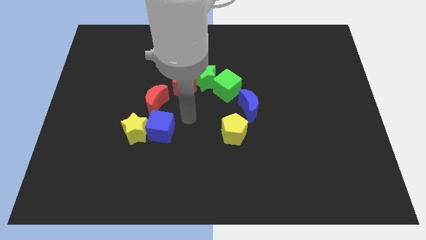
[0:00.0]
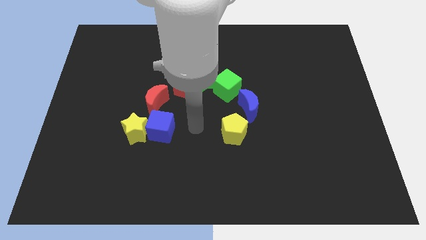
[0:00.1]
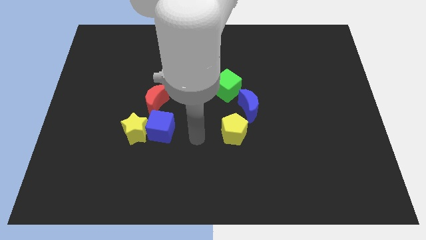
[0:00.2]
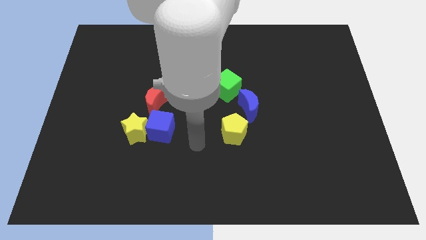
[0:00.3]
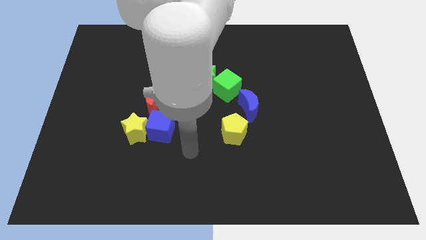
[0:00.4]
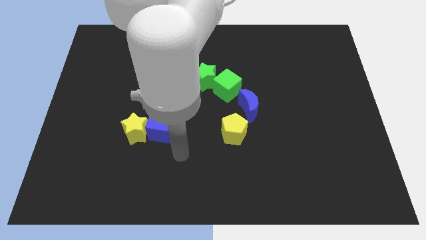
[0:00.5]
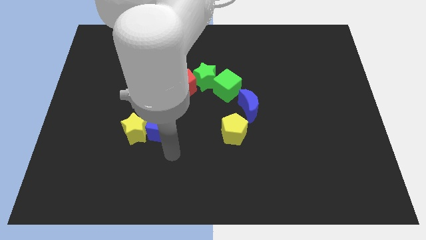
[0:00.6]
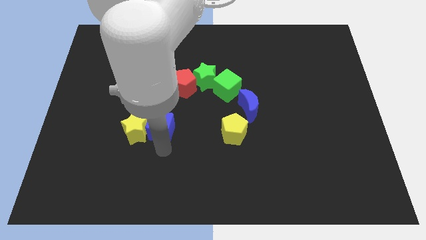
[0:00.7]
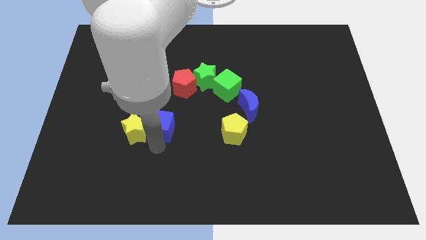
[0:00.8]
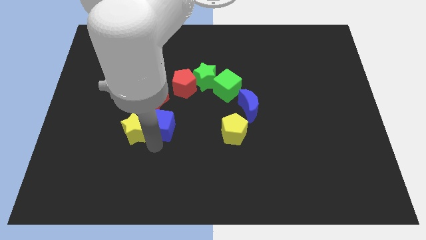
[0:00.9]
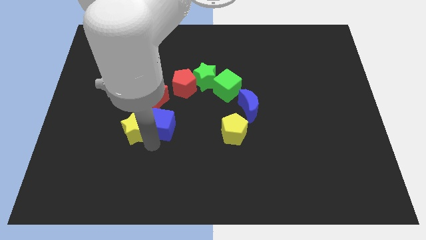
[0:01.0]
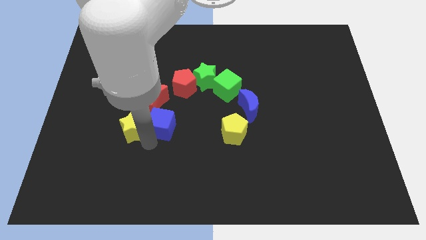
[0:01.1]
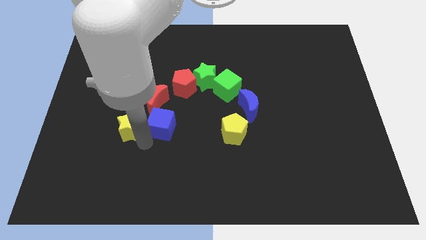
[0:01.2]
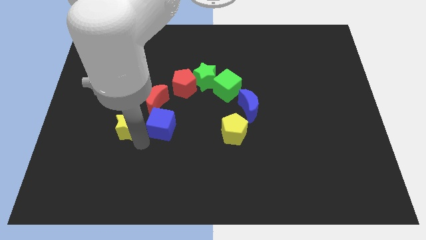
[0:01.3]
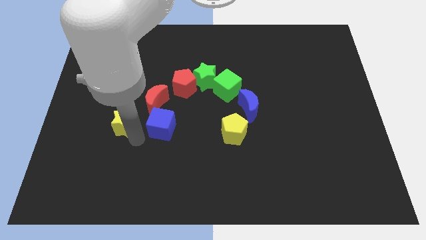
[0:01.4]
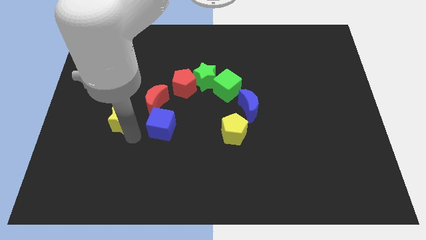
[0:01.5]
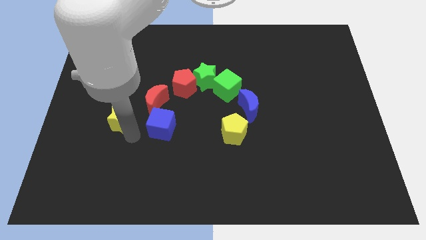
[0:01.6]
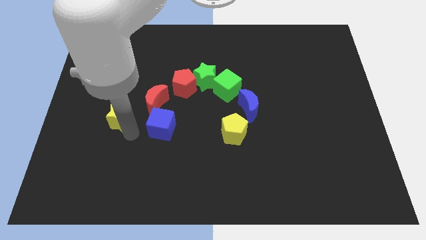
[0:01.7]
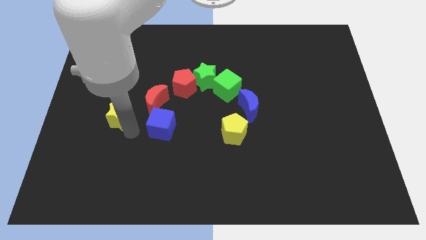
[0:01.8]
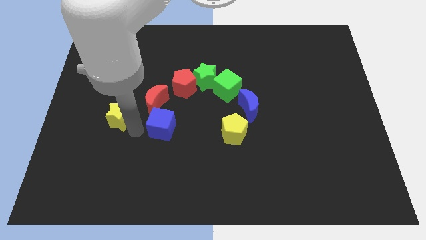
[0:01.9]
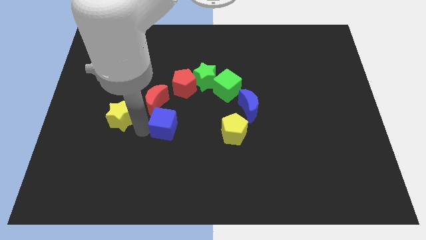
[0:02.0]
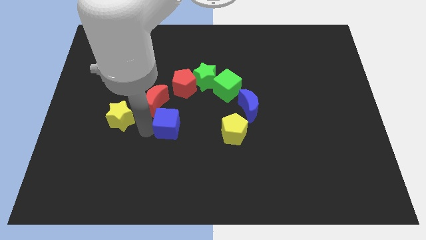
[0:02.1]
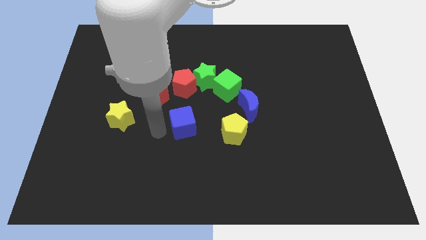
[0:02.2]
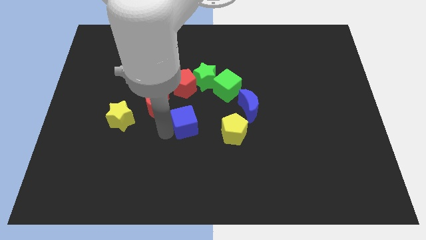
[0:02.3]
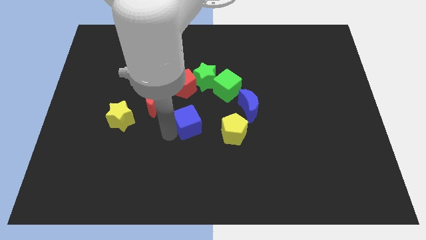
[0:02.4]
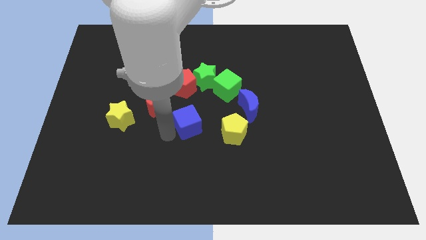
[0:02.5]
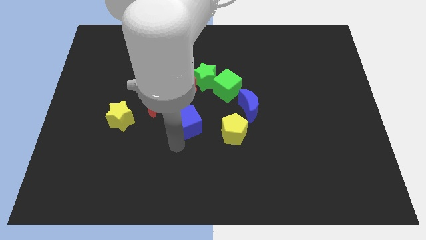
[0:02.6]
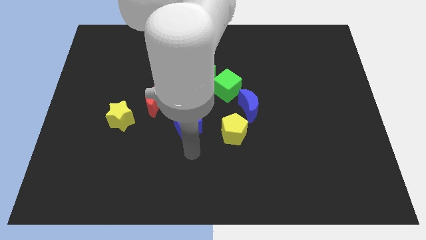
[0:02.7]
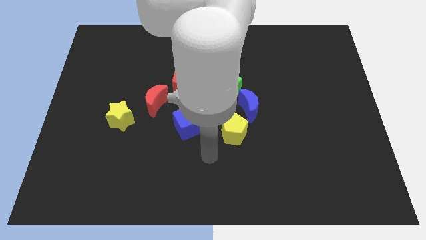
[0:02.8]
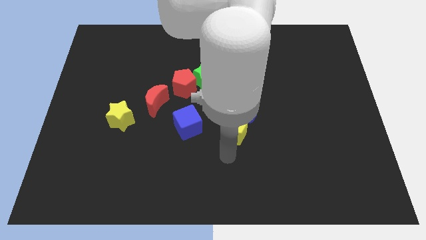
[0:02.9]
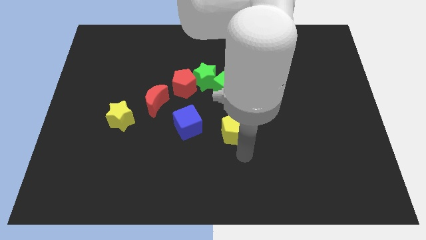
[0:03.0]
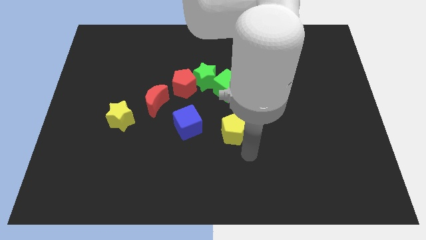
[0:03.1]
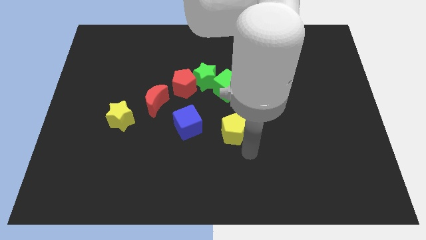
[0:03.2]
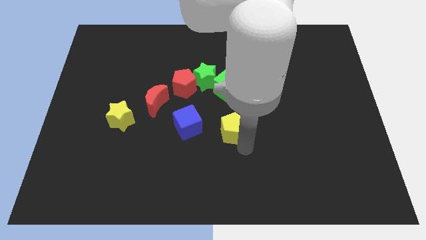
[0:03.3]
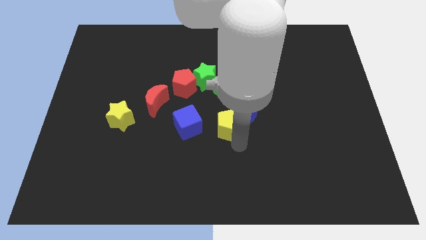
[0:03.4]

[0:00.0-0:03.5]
separate the red crescent and the blue cube

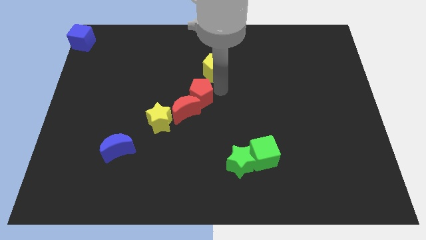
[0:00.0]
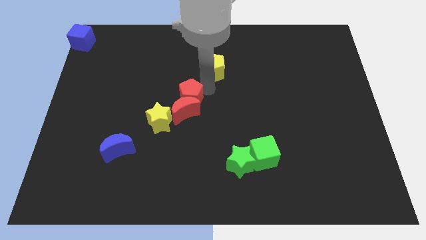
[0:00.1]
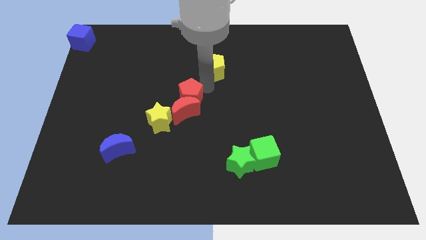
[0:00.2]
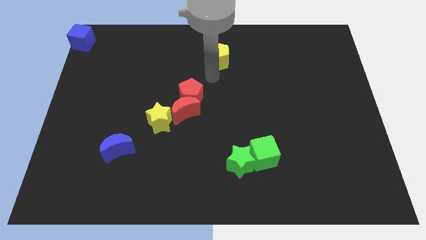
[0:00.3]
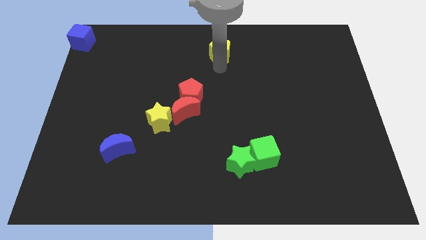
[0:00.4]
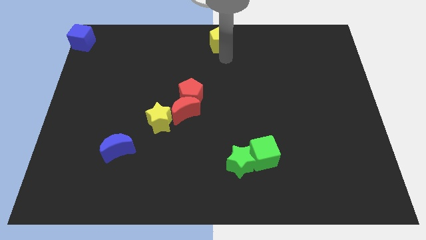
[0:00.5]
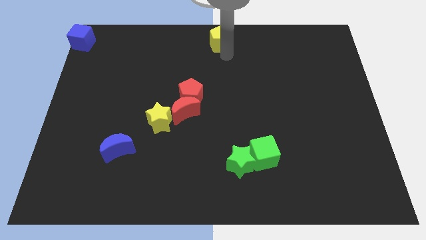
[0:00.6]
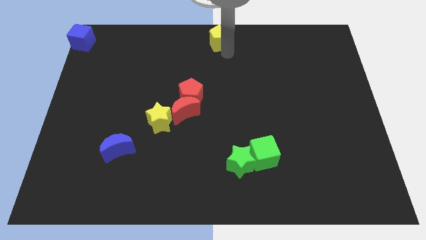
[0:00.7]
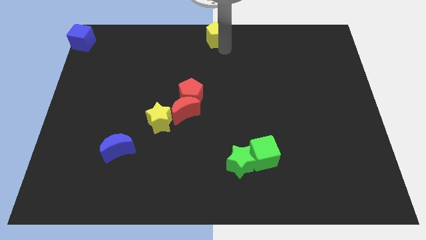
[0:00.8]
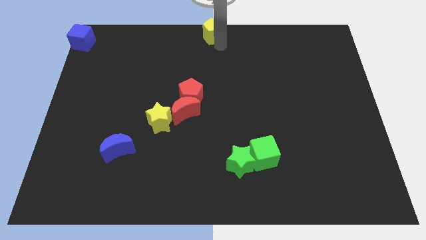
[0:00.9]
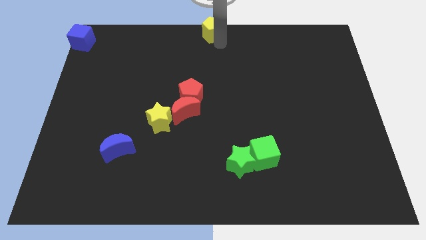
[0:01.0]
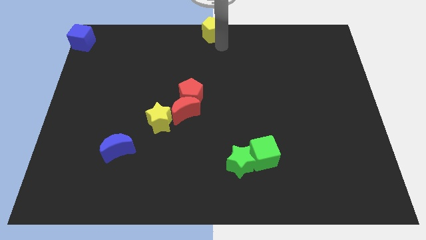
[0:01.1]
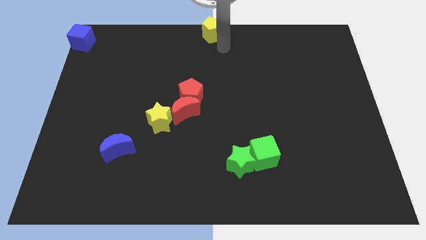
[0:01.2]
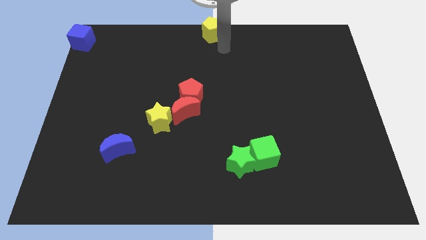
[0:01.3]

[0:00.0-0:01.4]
move the yellow pentagon to the top center of the board

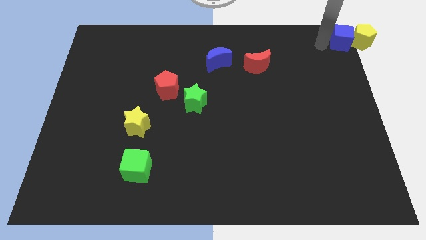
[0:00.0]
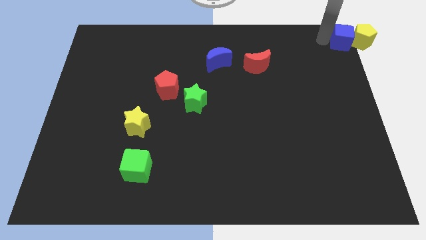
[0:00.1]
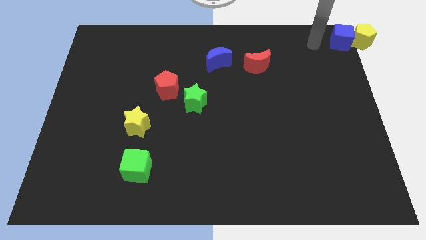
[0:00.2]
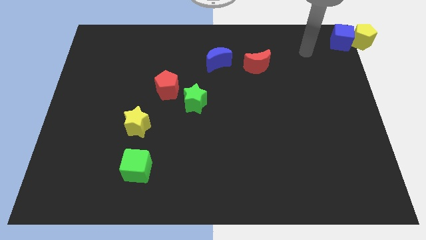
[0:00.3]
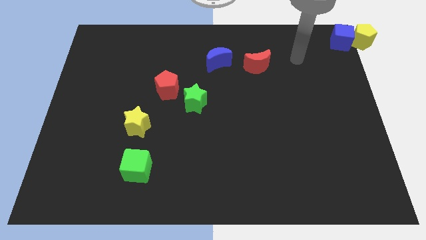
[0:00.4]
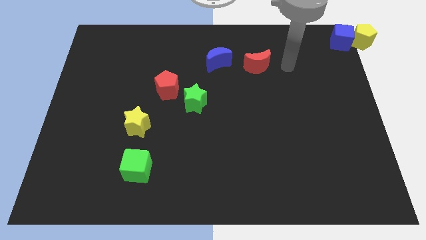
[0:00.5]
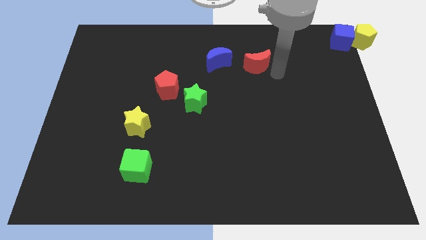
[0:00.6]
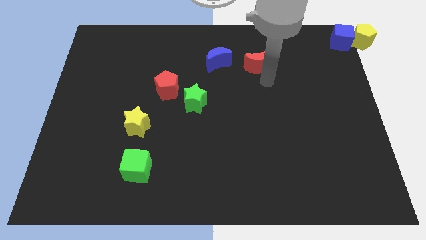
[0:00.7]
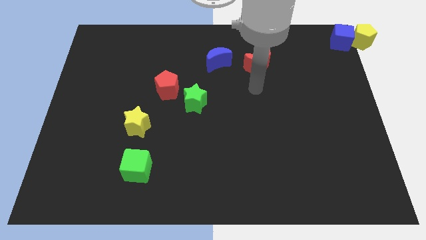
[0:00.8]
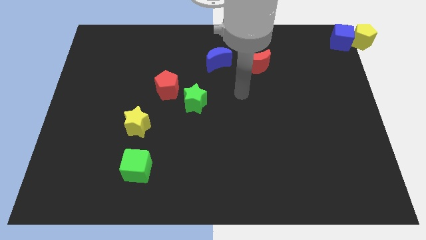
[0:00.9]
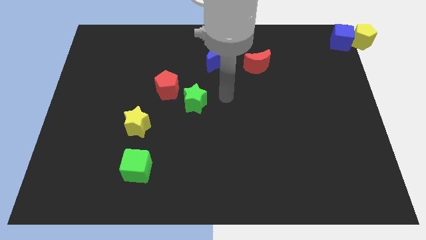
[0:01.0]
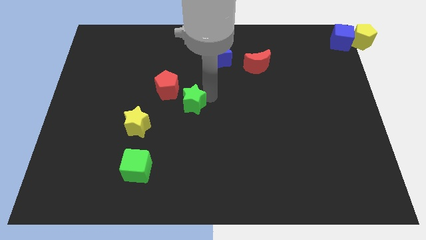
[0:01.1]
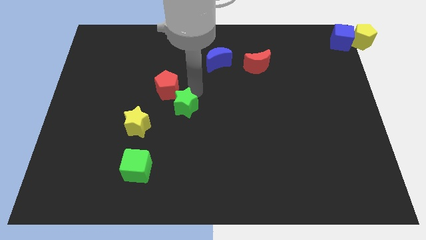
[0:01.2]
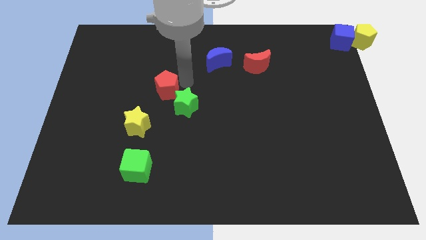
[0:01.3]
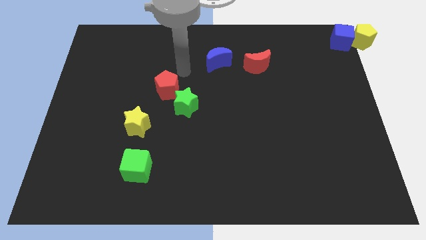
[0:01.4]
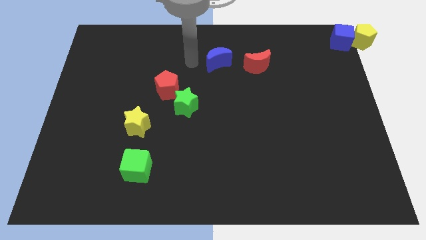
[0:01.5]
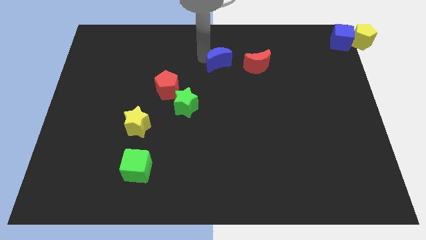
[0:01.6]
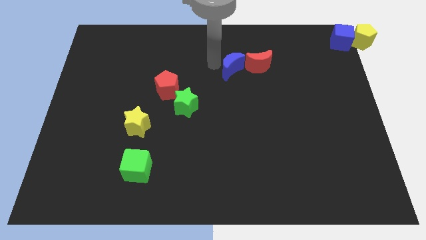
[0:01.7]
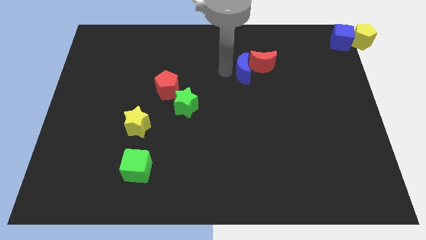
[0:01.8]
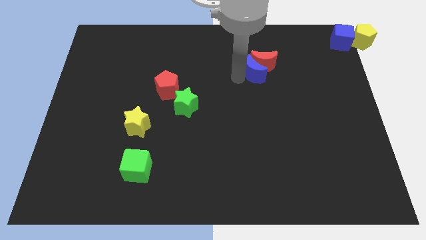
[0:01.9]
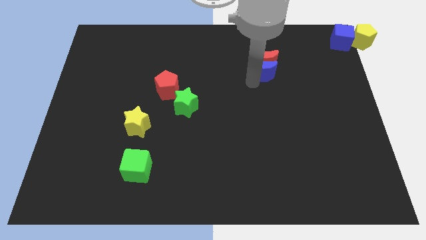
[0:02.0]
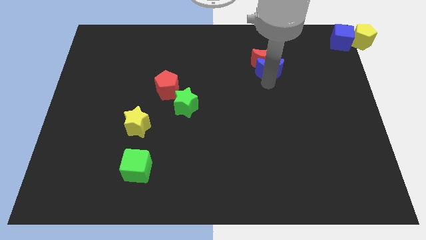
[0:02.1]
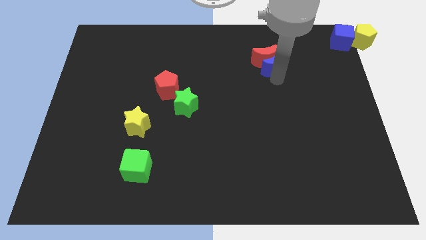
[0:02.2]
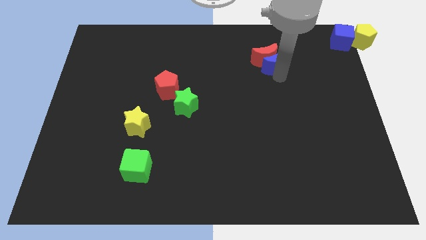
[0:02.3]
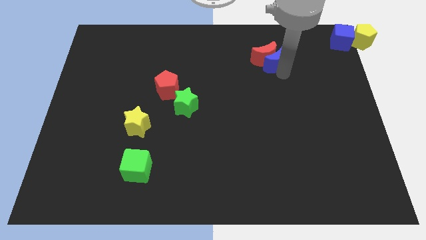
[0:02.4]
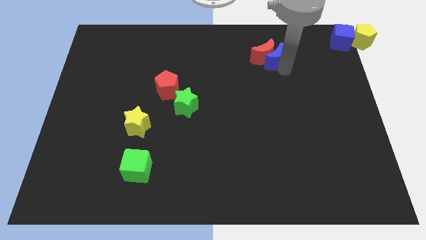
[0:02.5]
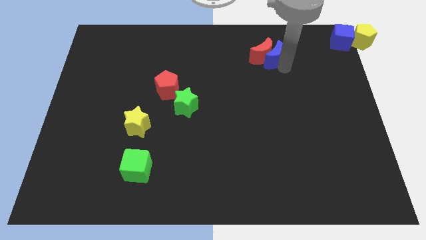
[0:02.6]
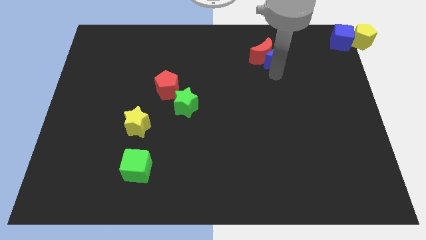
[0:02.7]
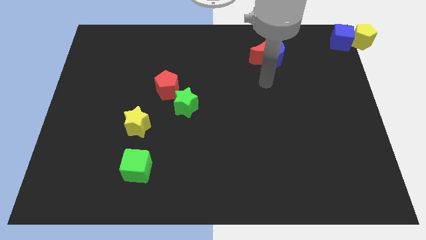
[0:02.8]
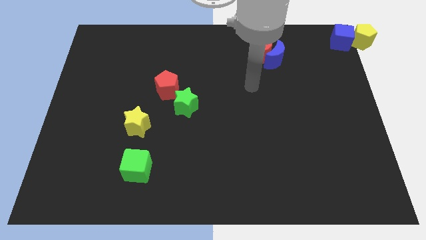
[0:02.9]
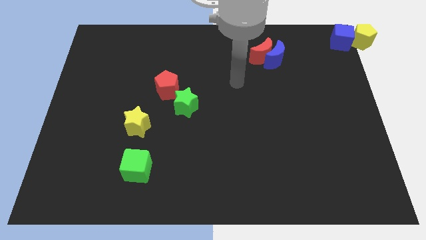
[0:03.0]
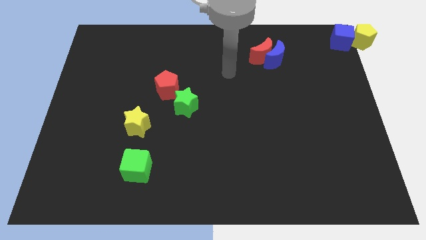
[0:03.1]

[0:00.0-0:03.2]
adjust the blue moon to the right of the red moon

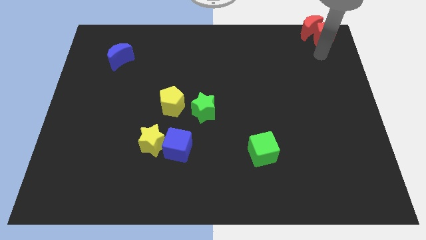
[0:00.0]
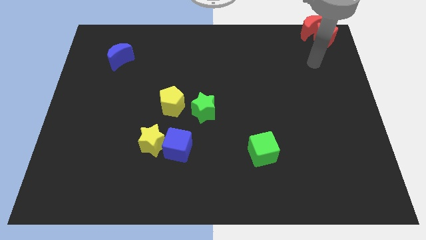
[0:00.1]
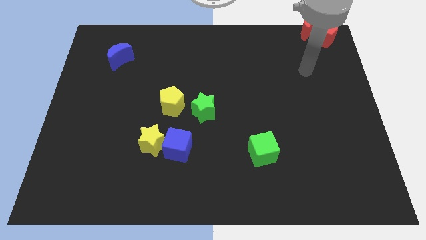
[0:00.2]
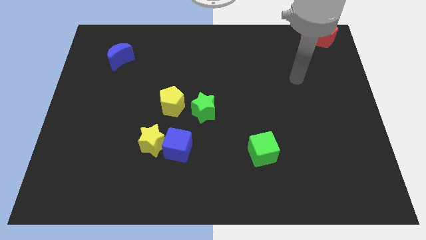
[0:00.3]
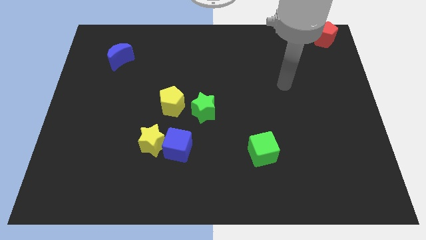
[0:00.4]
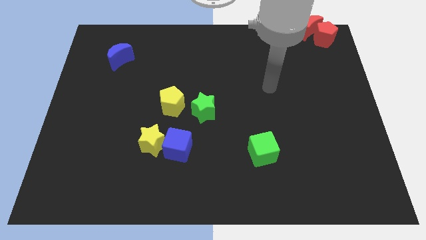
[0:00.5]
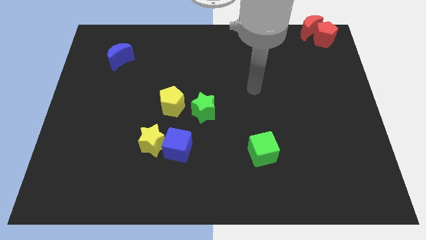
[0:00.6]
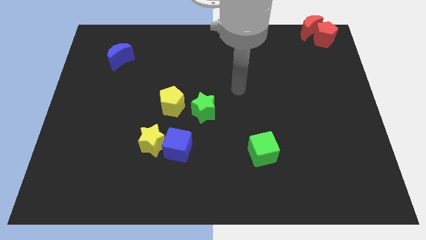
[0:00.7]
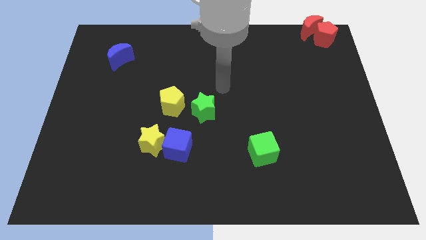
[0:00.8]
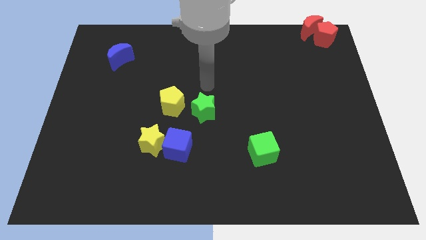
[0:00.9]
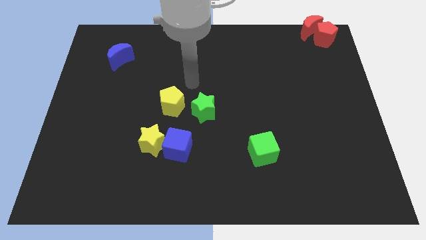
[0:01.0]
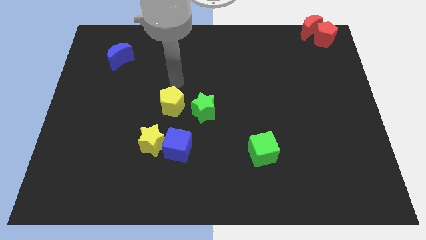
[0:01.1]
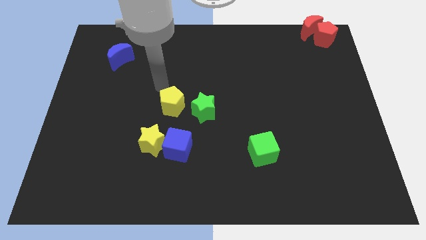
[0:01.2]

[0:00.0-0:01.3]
point your arm at the top of the yellow pentagon
